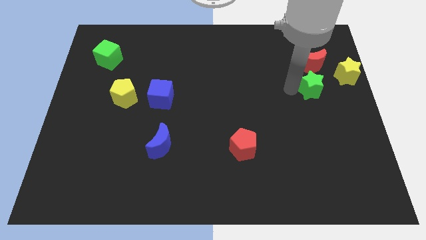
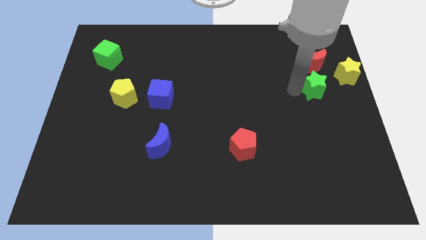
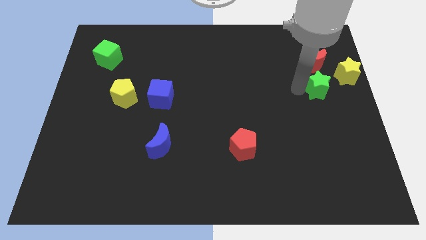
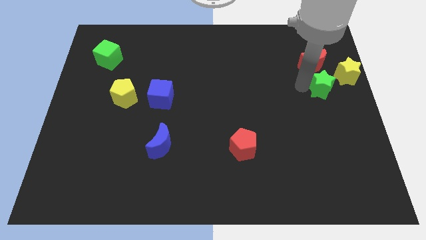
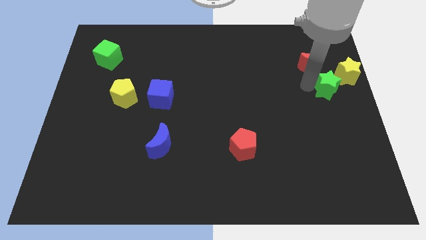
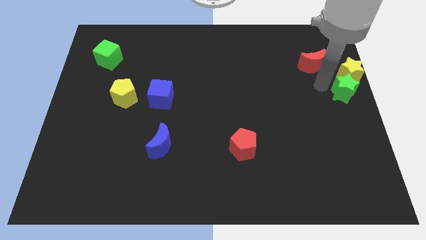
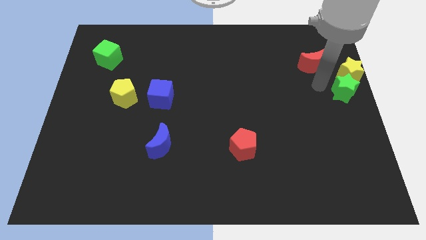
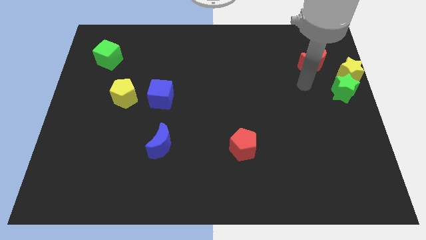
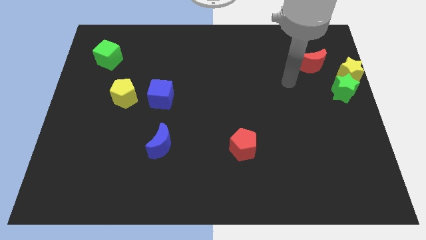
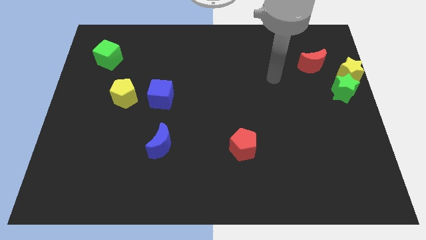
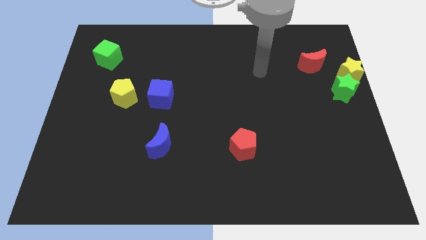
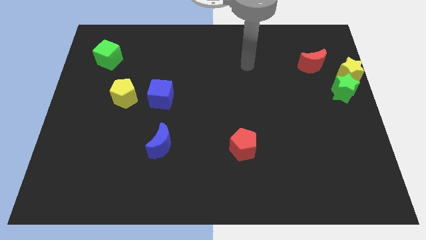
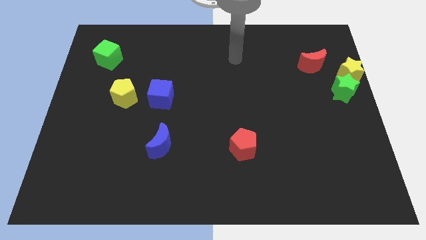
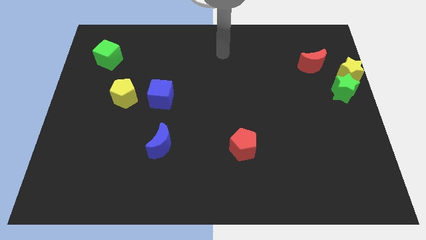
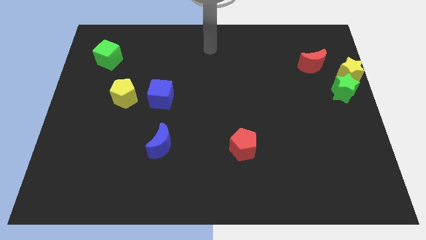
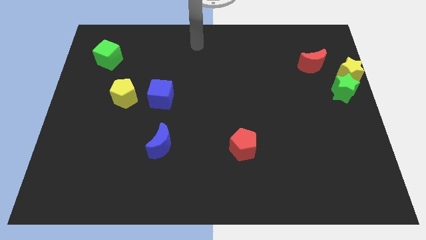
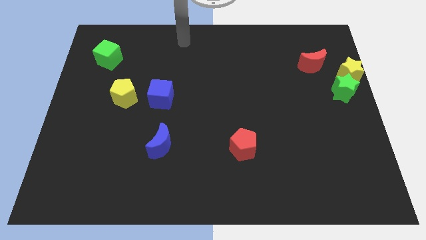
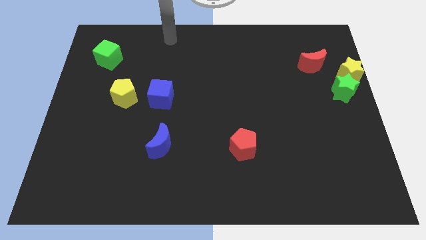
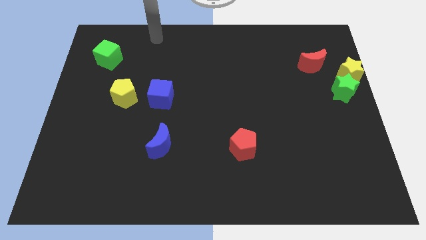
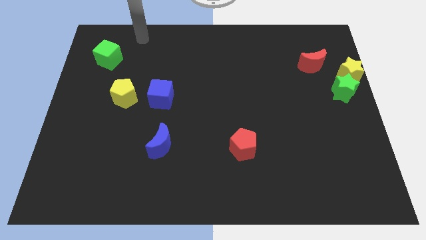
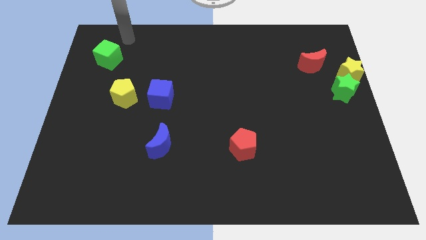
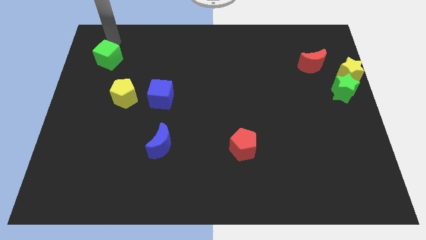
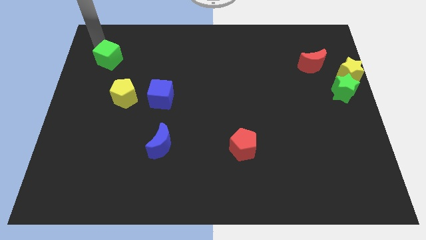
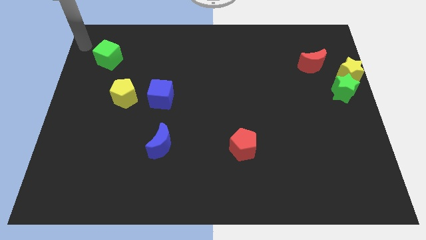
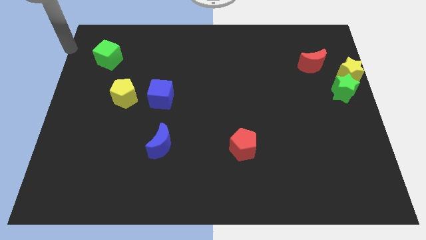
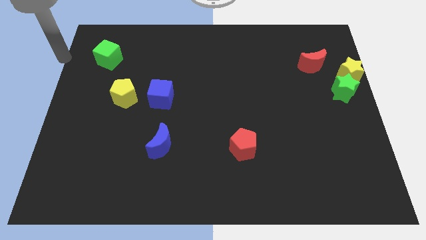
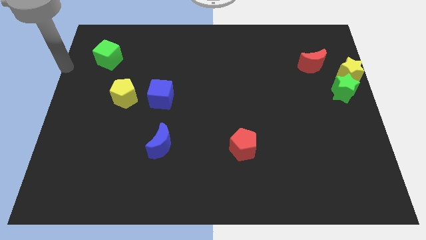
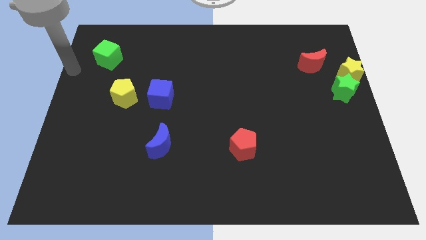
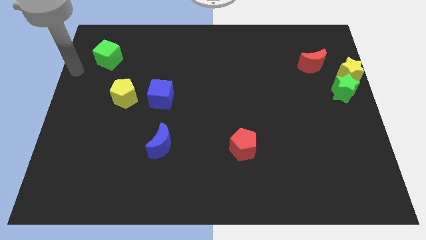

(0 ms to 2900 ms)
move the arm to the top left corner

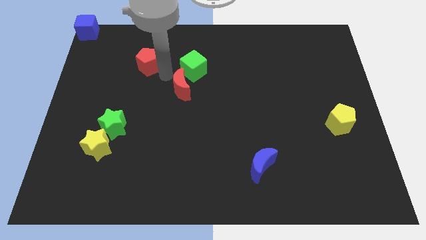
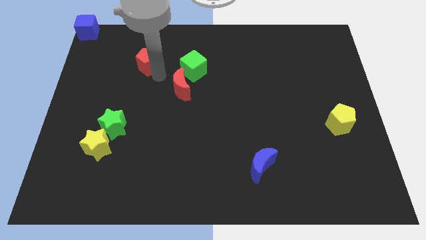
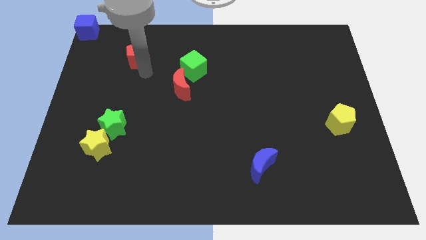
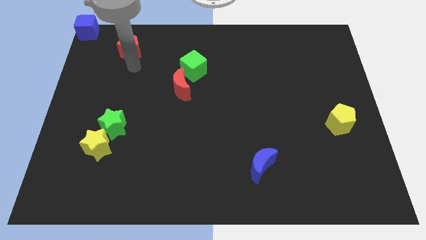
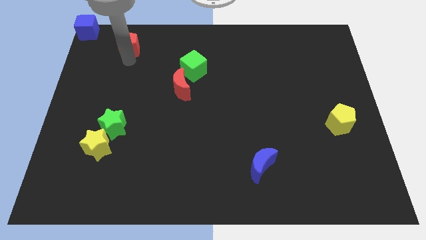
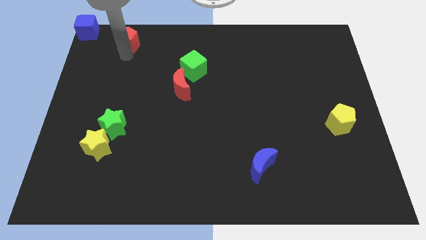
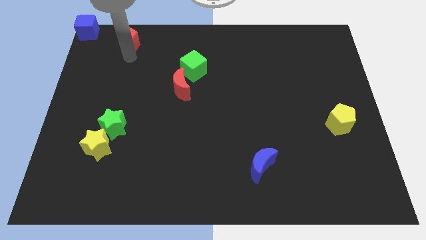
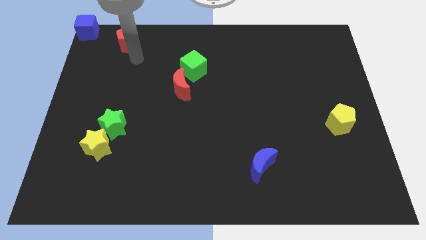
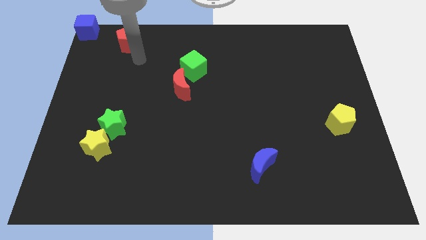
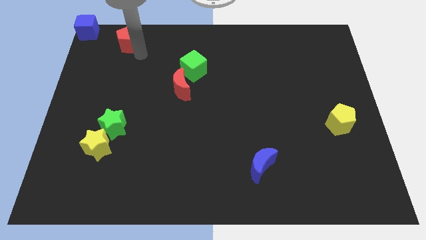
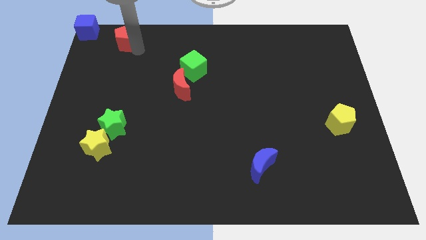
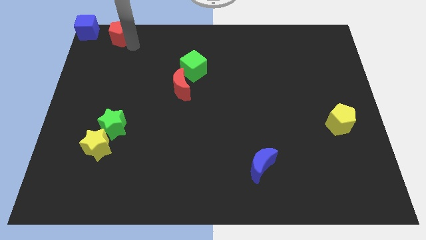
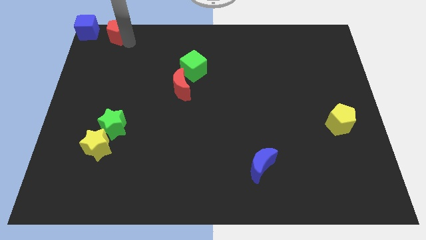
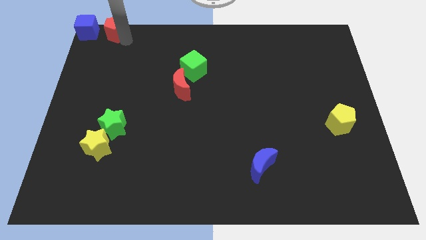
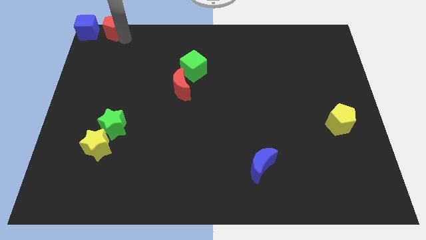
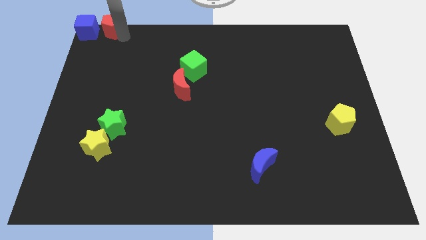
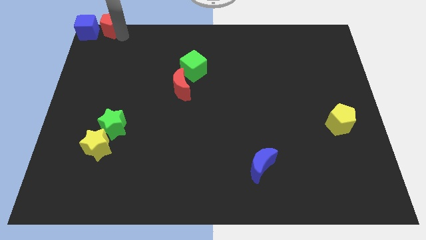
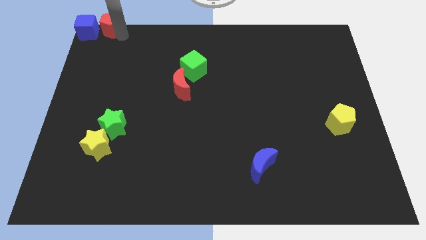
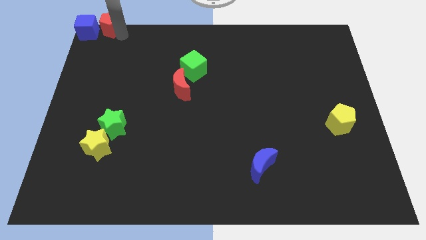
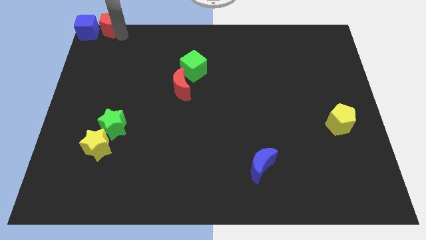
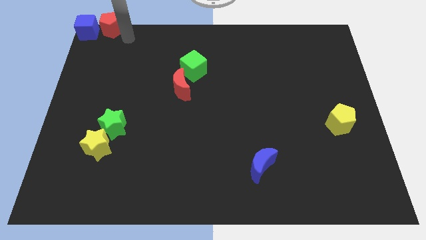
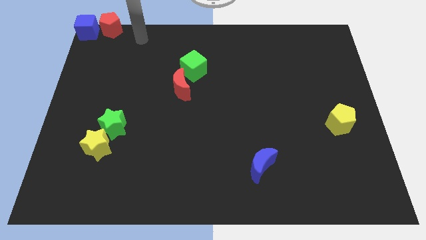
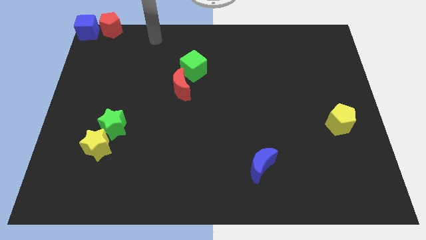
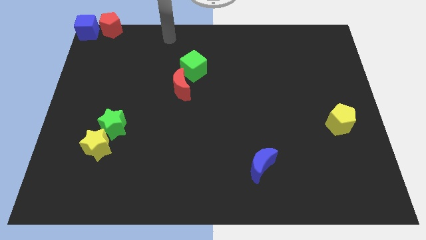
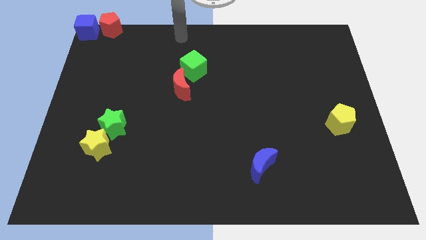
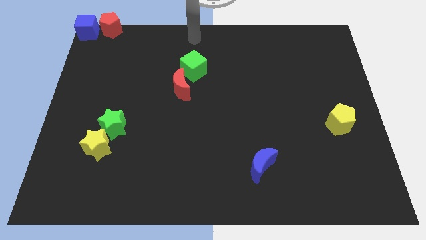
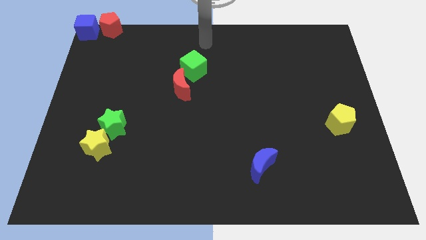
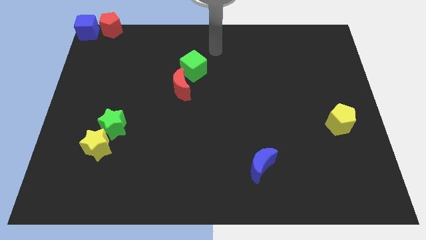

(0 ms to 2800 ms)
place red pentagon right of blue cube

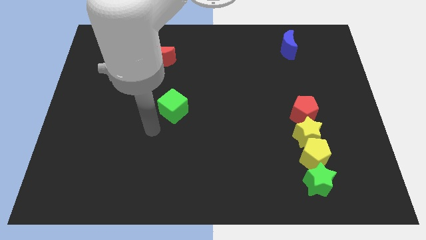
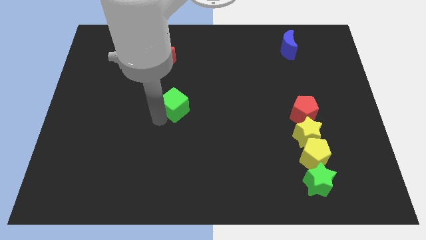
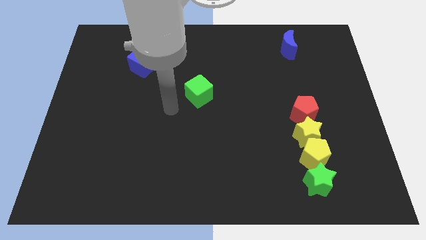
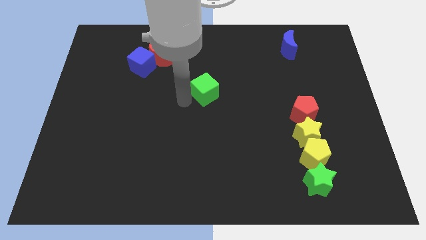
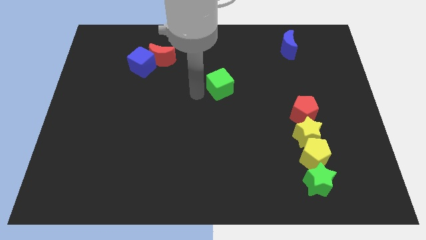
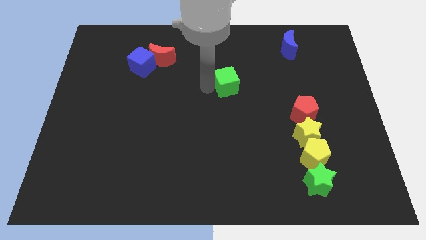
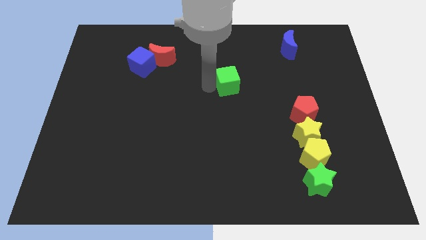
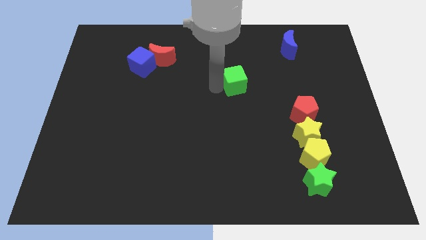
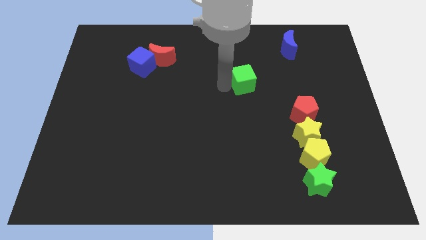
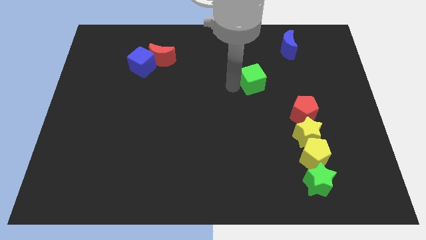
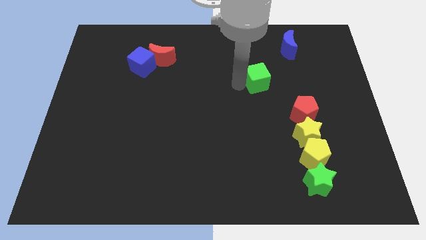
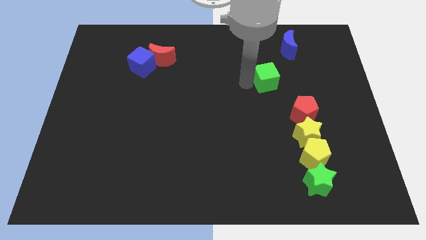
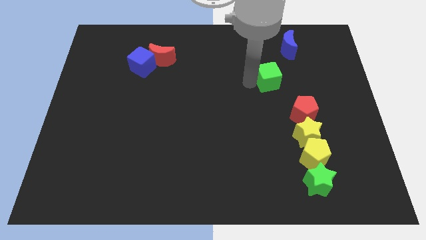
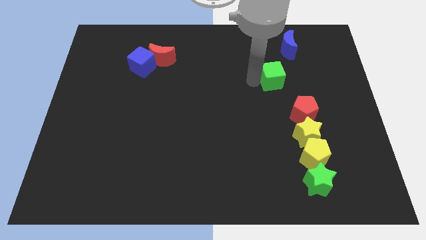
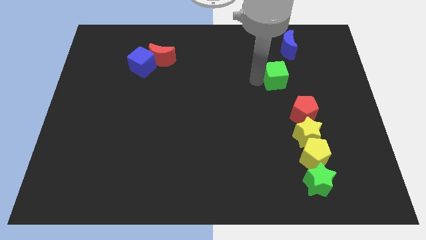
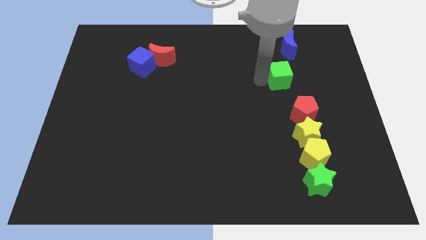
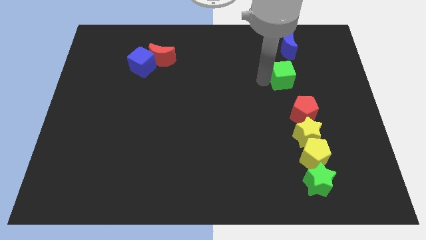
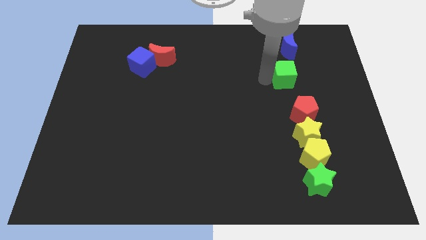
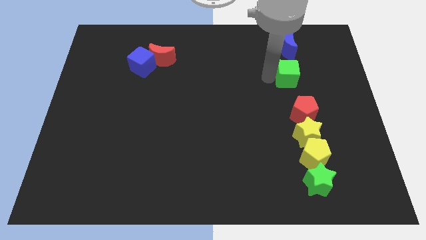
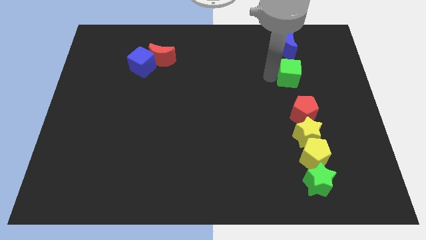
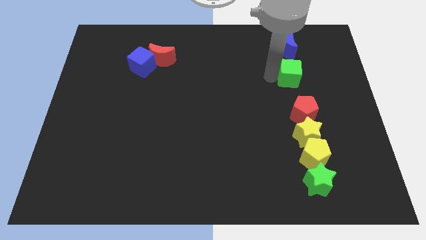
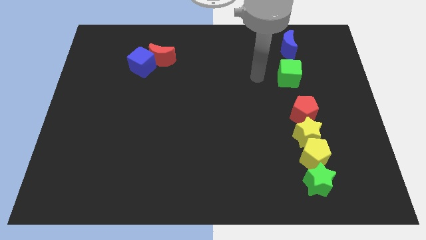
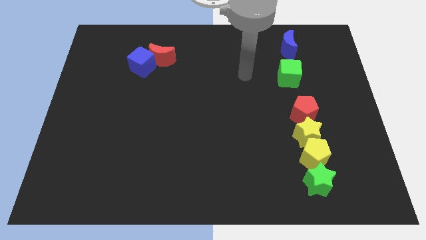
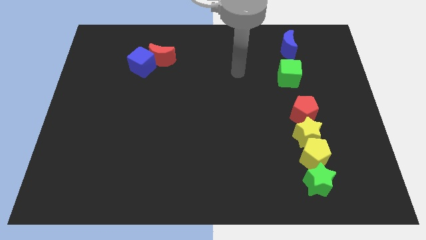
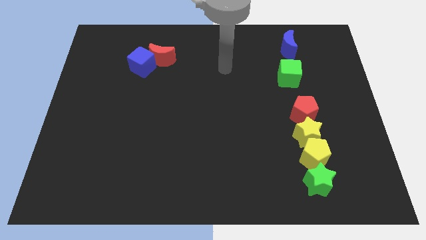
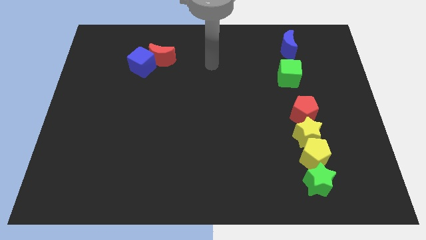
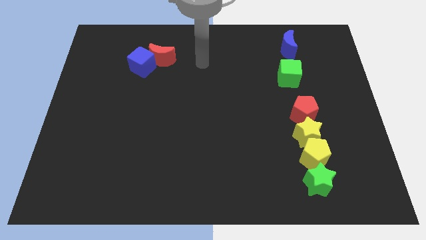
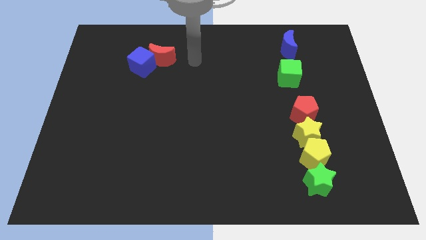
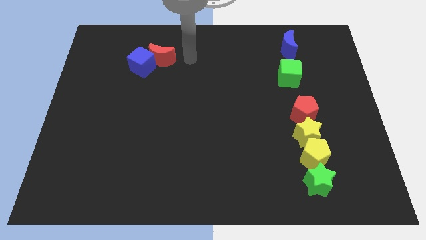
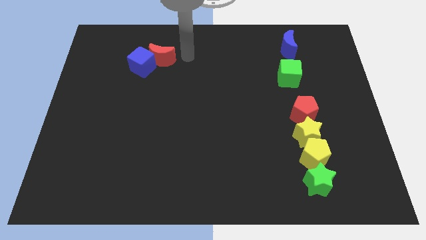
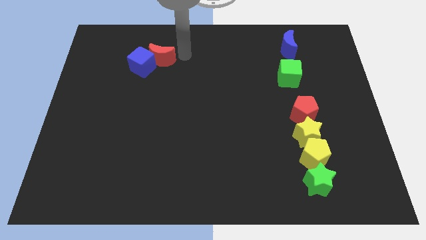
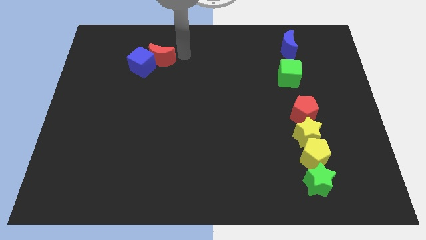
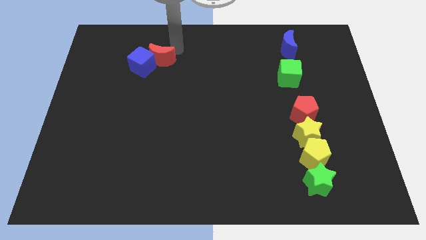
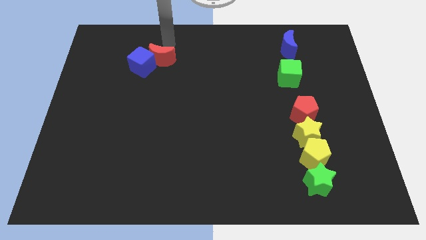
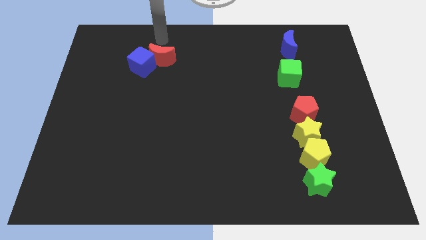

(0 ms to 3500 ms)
put the green cube vertically below the blue crescent
